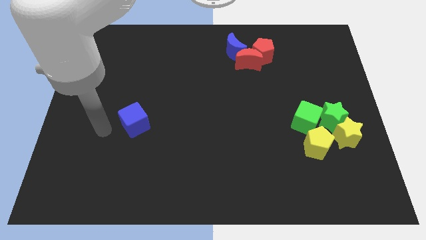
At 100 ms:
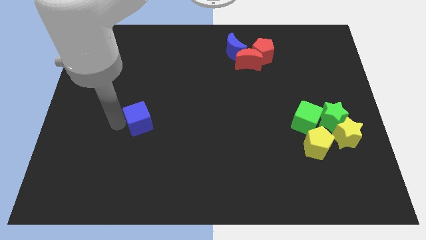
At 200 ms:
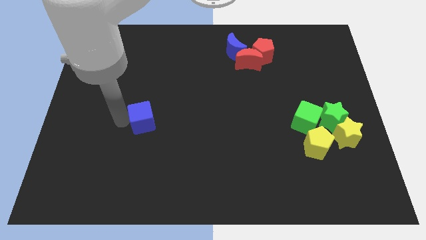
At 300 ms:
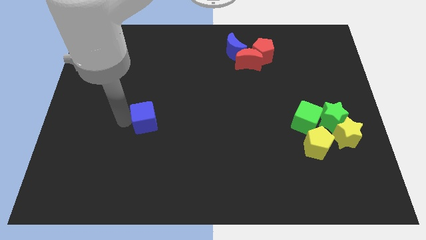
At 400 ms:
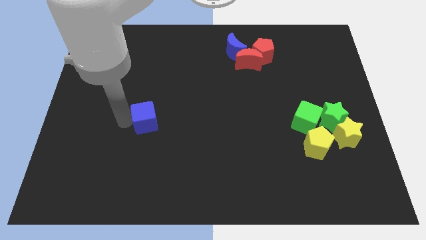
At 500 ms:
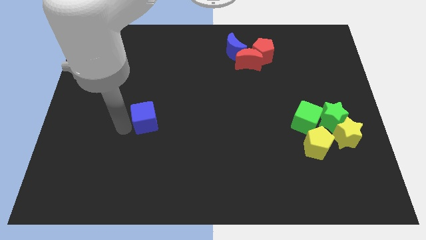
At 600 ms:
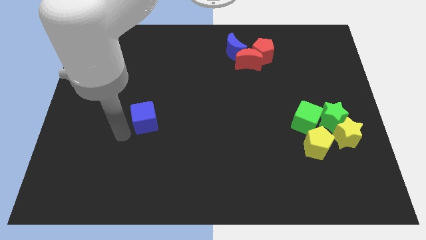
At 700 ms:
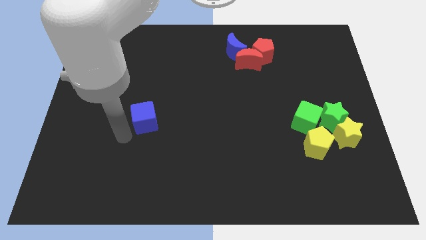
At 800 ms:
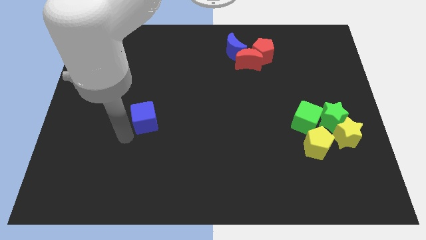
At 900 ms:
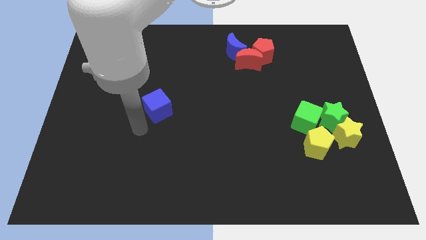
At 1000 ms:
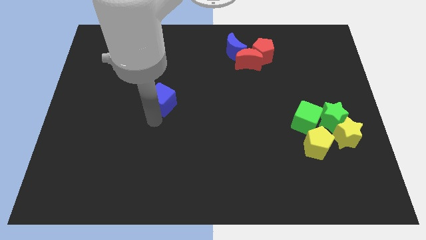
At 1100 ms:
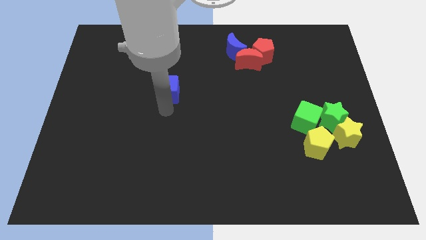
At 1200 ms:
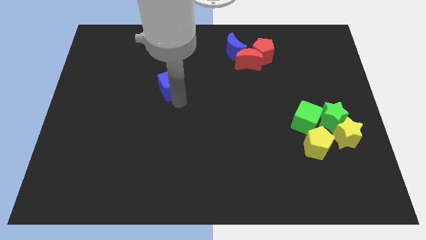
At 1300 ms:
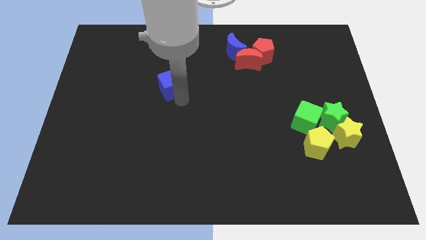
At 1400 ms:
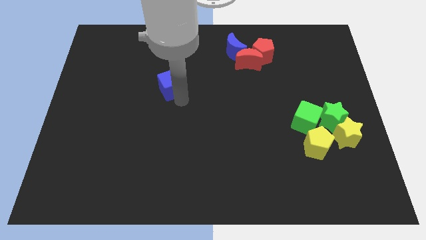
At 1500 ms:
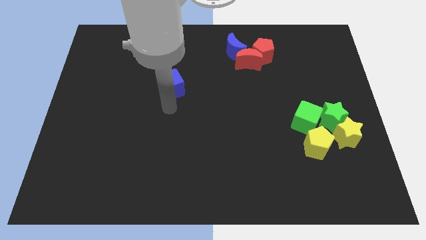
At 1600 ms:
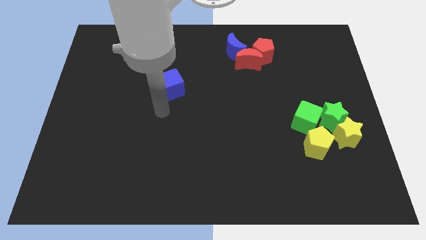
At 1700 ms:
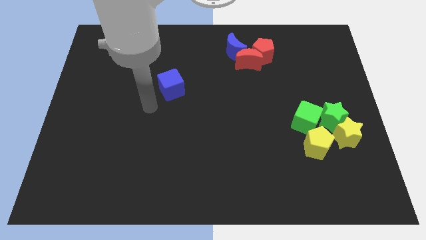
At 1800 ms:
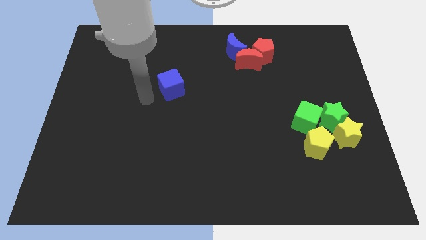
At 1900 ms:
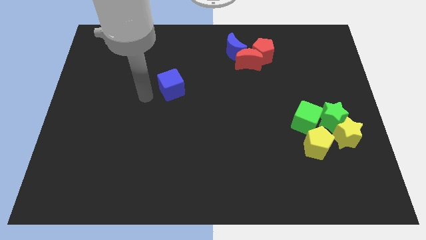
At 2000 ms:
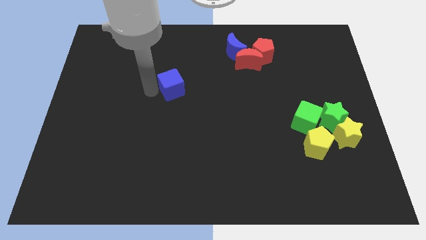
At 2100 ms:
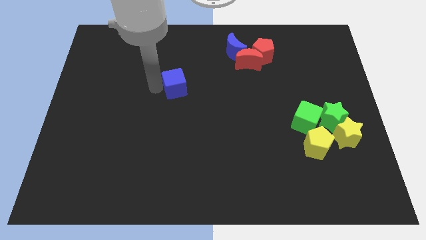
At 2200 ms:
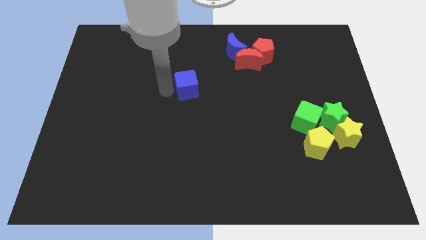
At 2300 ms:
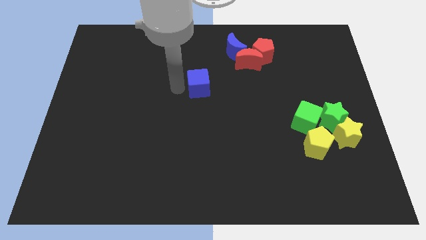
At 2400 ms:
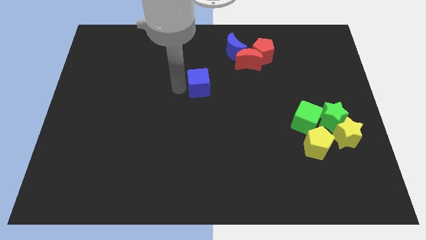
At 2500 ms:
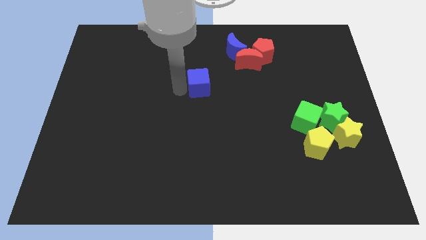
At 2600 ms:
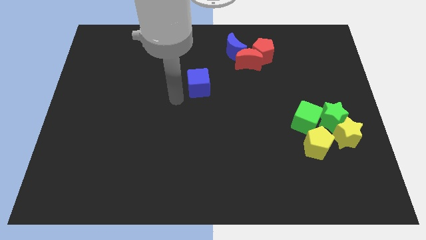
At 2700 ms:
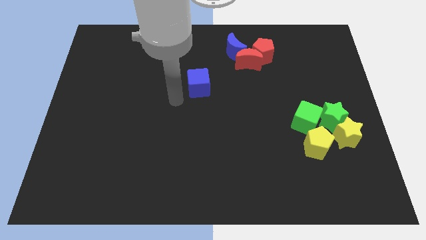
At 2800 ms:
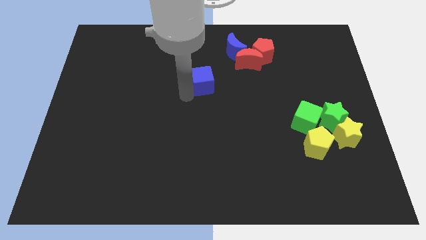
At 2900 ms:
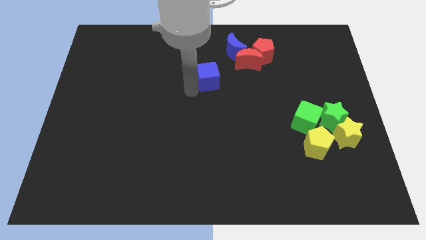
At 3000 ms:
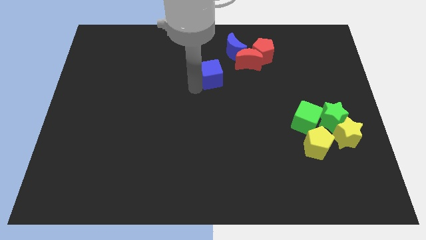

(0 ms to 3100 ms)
move blue cube middle of the board

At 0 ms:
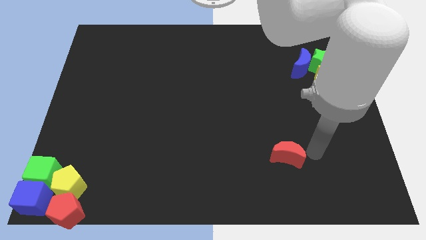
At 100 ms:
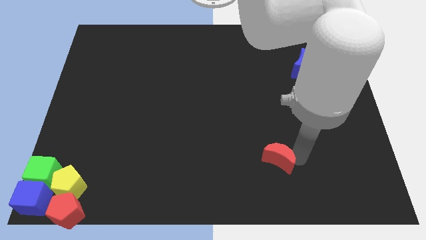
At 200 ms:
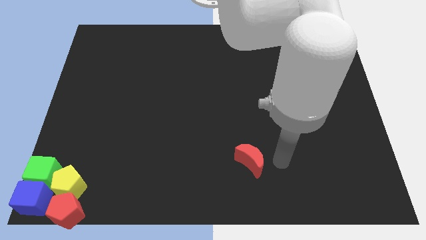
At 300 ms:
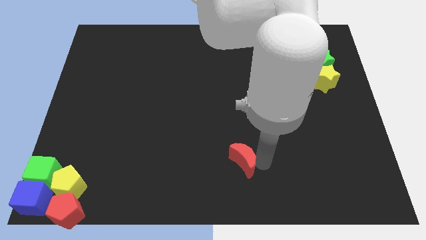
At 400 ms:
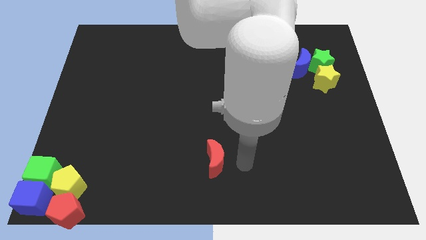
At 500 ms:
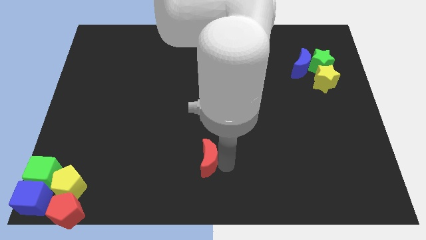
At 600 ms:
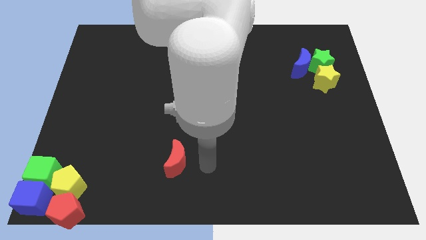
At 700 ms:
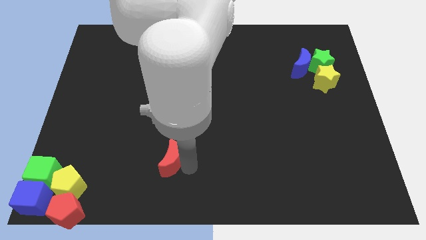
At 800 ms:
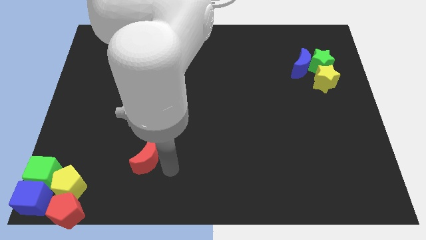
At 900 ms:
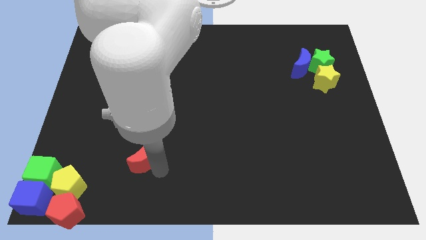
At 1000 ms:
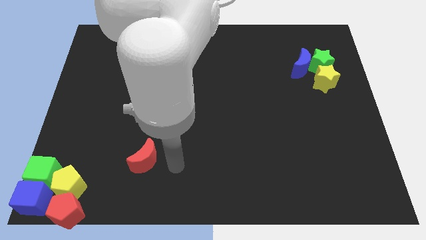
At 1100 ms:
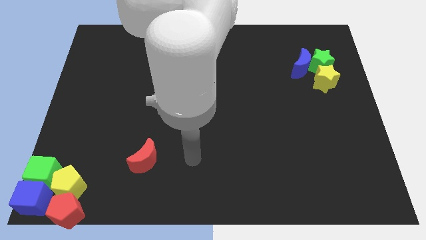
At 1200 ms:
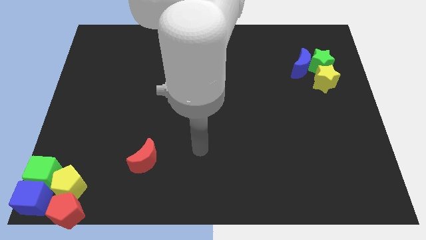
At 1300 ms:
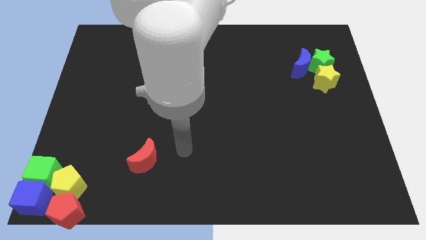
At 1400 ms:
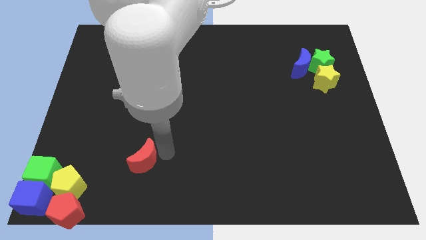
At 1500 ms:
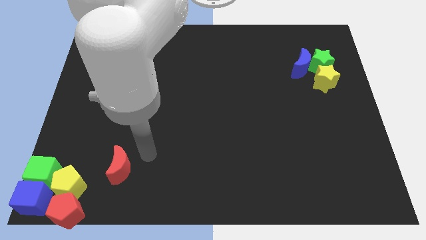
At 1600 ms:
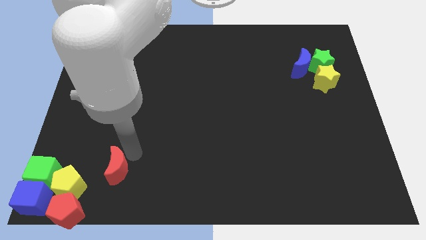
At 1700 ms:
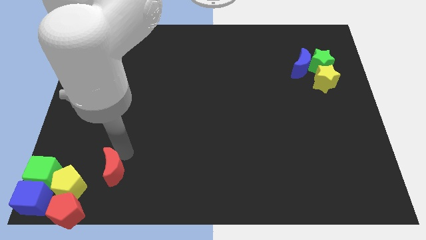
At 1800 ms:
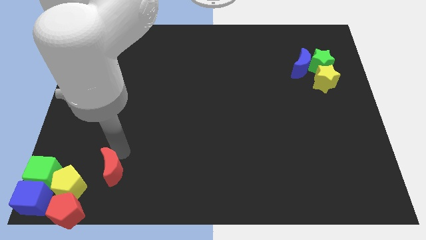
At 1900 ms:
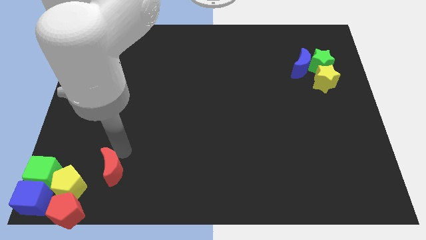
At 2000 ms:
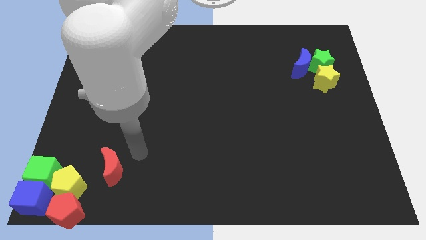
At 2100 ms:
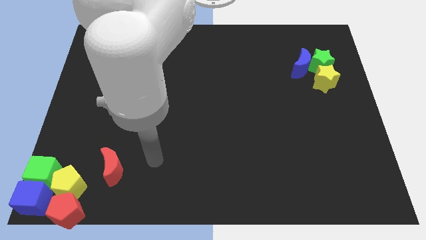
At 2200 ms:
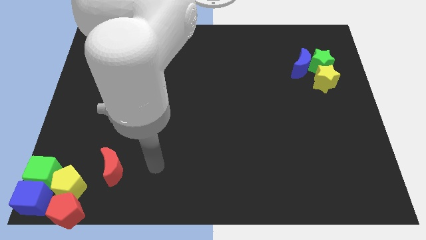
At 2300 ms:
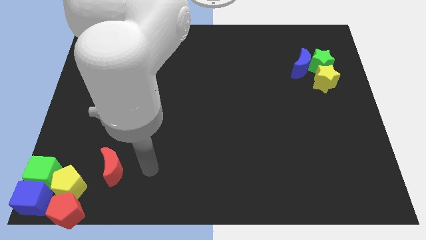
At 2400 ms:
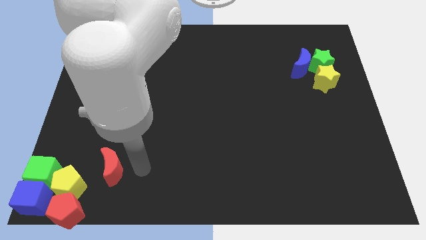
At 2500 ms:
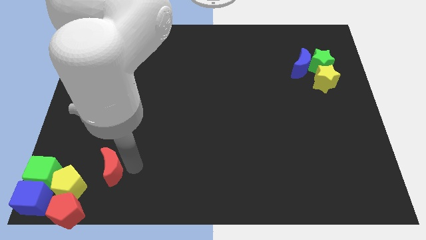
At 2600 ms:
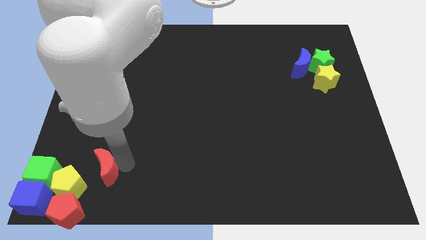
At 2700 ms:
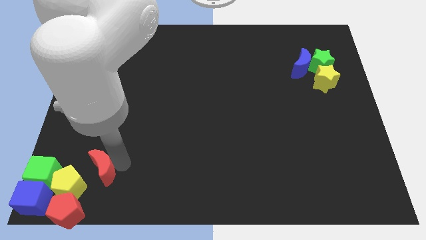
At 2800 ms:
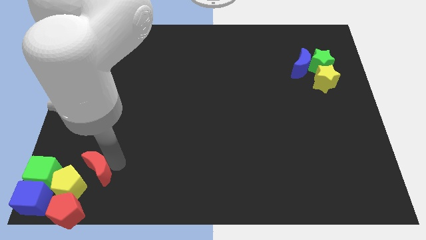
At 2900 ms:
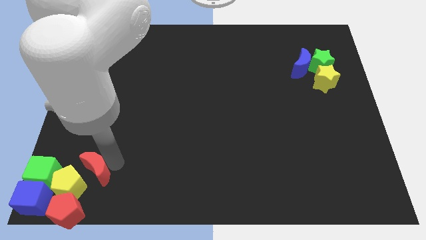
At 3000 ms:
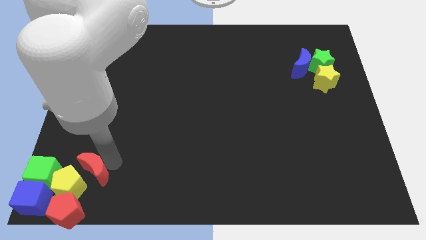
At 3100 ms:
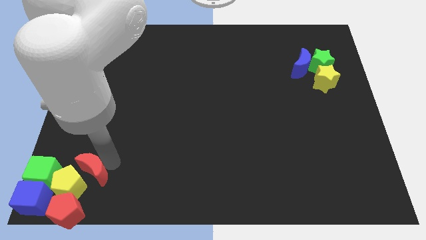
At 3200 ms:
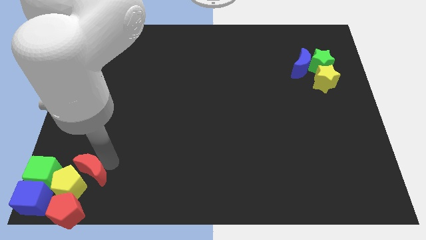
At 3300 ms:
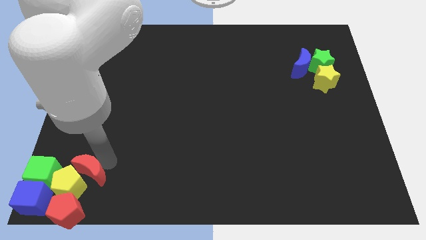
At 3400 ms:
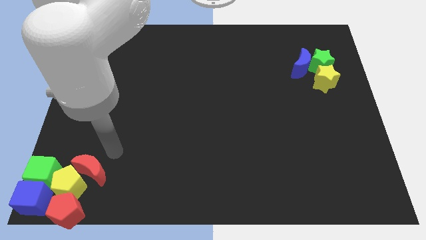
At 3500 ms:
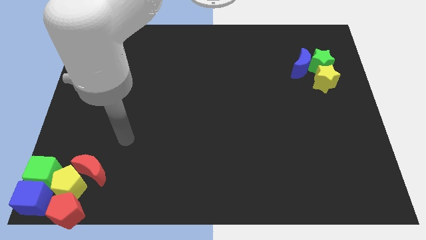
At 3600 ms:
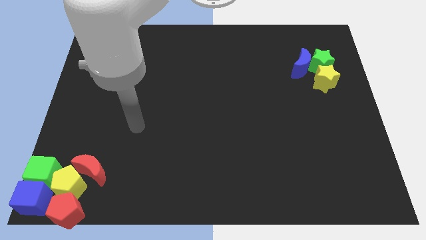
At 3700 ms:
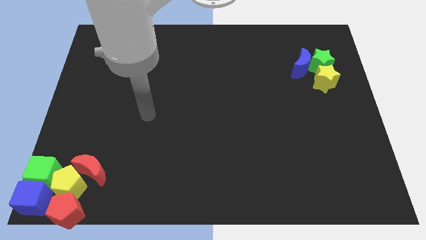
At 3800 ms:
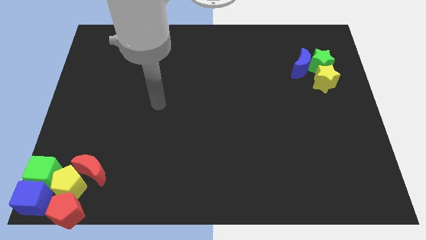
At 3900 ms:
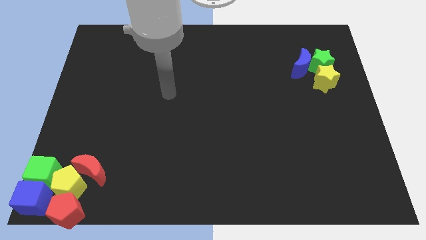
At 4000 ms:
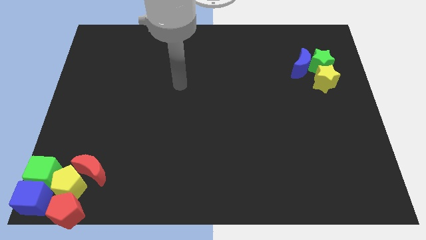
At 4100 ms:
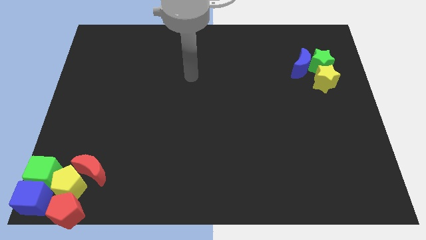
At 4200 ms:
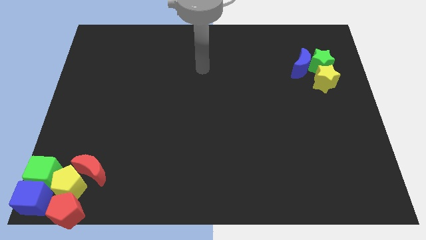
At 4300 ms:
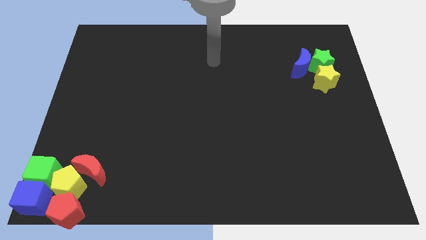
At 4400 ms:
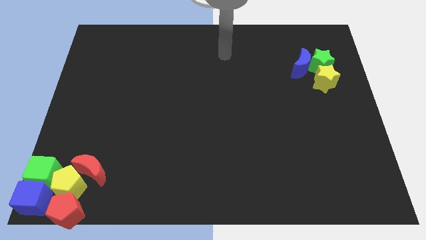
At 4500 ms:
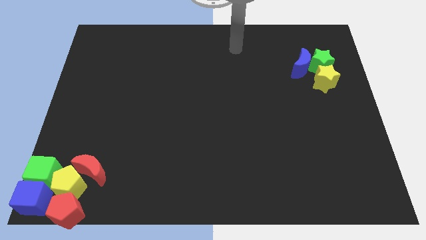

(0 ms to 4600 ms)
place the red crescent above the yellow pentagon

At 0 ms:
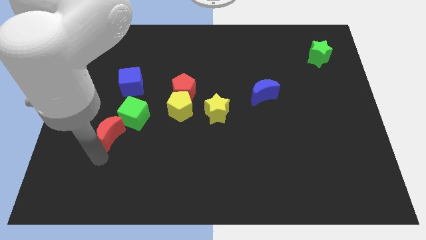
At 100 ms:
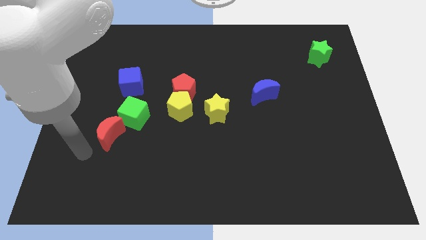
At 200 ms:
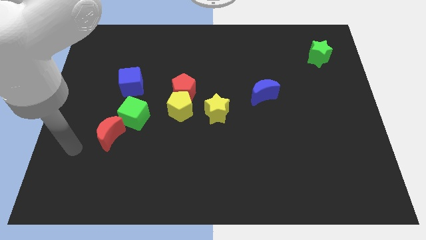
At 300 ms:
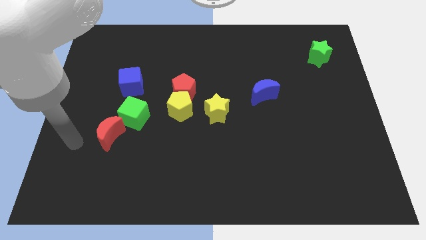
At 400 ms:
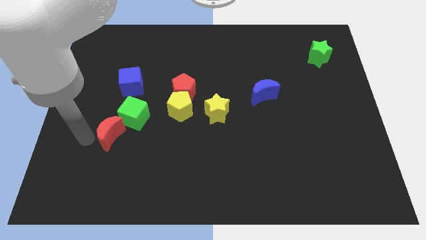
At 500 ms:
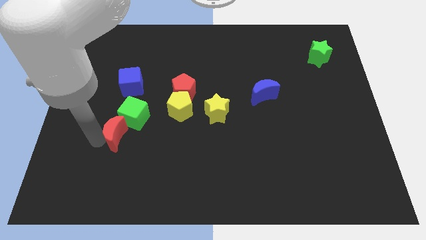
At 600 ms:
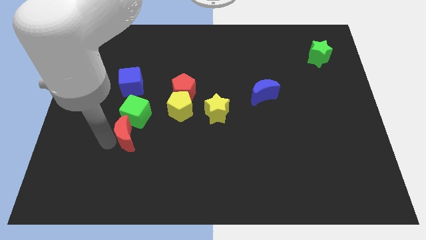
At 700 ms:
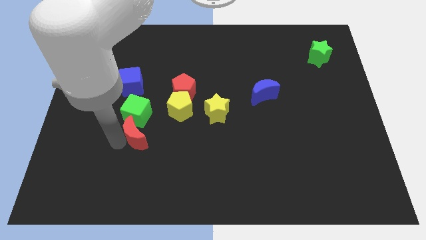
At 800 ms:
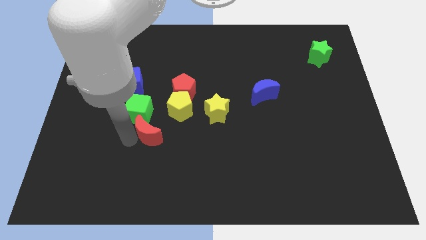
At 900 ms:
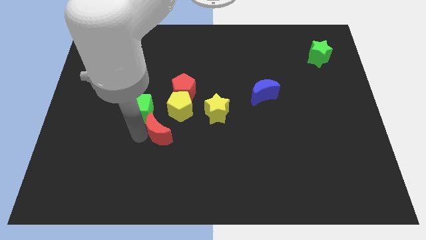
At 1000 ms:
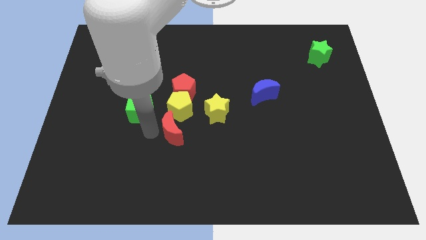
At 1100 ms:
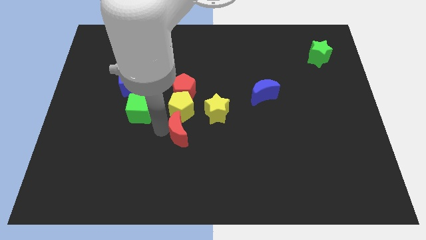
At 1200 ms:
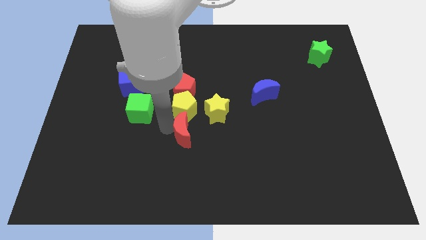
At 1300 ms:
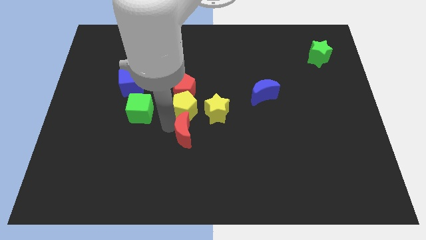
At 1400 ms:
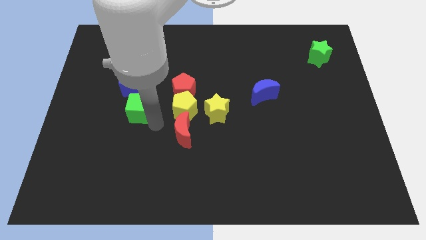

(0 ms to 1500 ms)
move the red crescent to the bottom of the yellow pentagon
